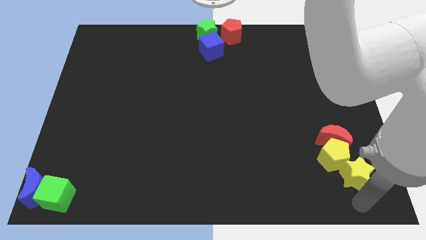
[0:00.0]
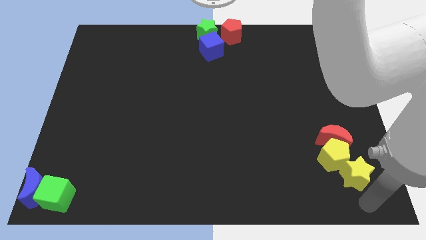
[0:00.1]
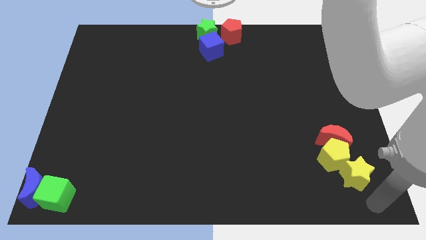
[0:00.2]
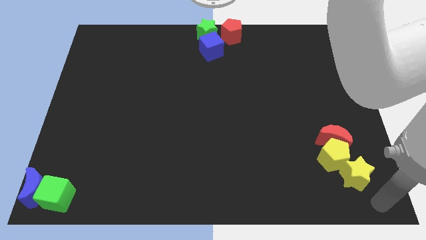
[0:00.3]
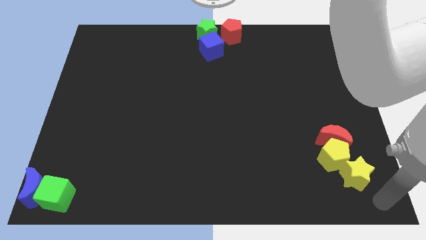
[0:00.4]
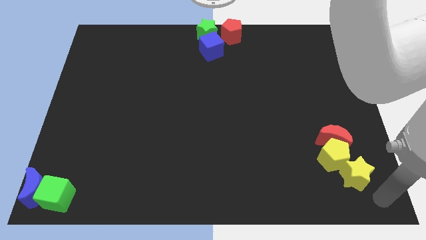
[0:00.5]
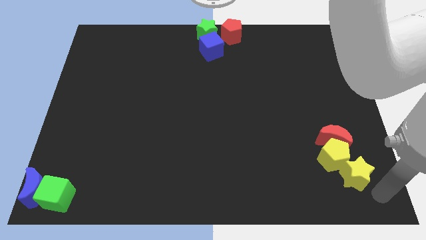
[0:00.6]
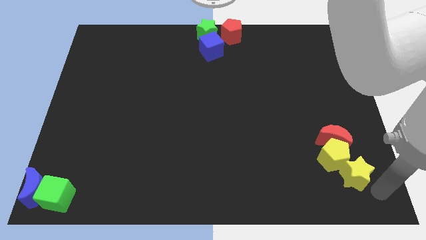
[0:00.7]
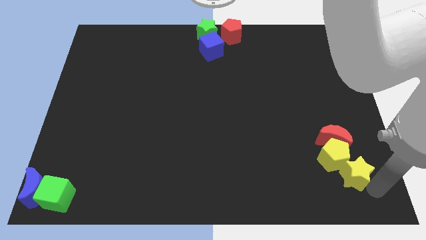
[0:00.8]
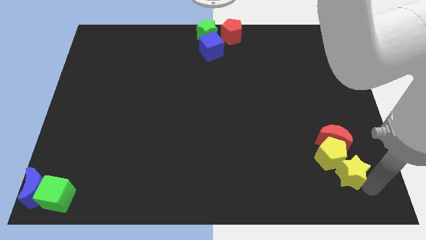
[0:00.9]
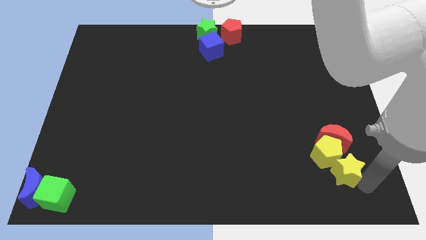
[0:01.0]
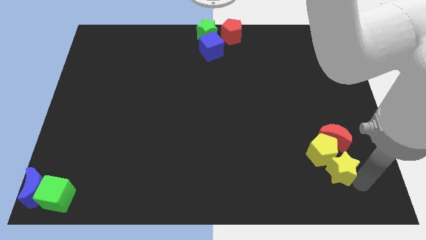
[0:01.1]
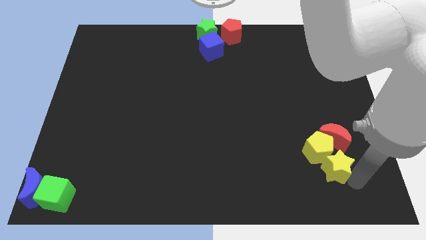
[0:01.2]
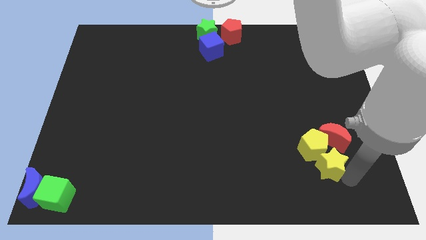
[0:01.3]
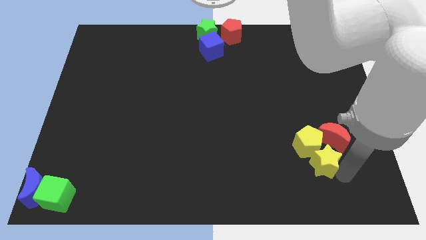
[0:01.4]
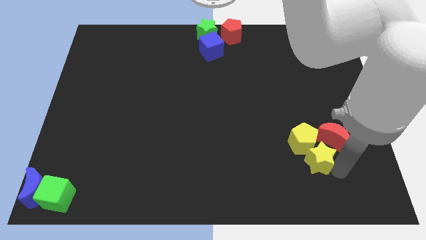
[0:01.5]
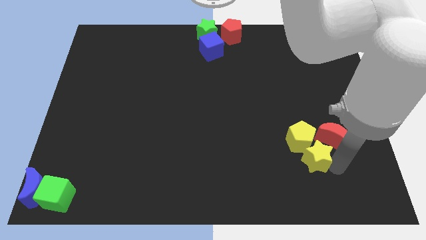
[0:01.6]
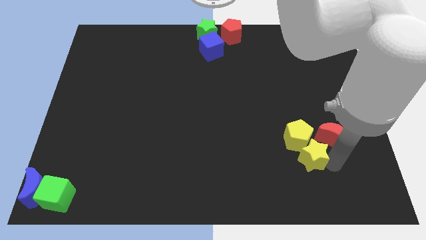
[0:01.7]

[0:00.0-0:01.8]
push the yellow pentagon slightly with the yellow star towards the center of the board

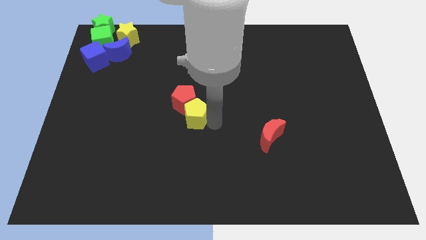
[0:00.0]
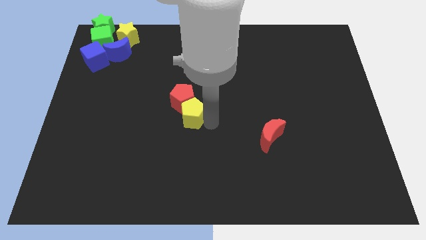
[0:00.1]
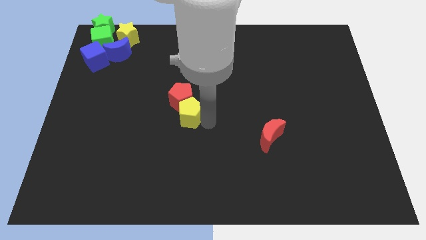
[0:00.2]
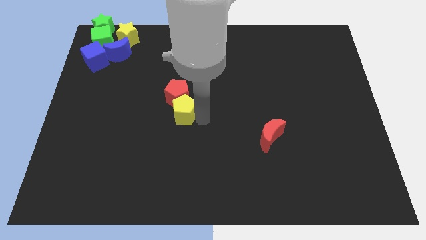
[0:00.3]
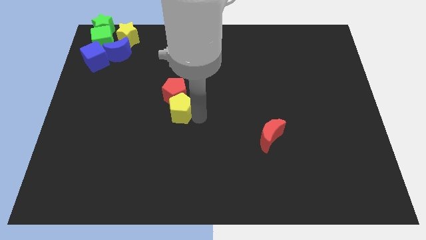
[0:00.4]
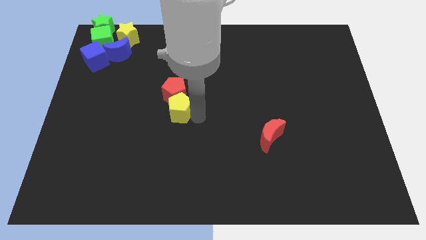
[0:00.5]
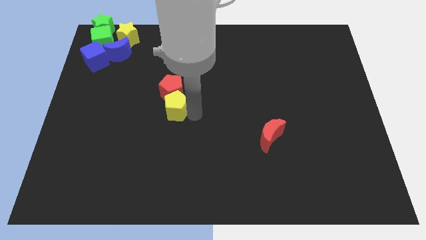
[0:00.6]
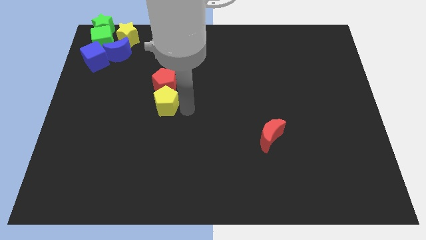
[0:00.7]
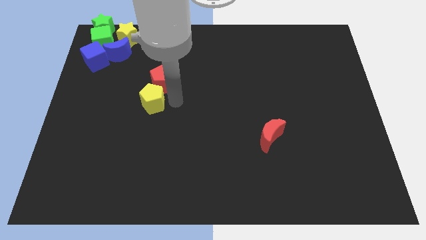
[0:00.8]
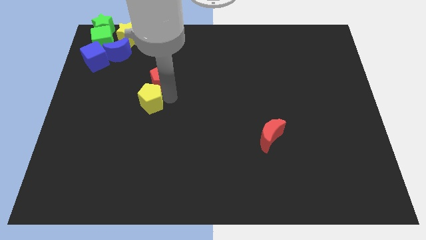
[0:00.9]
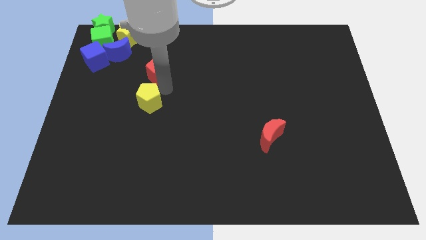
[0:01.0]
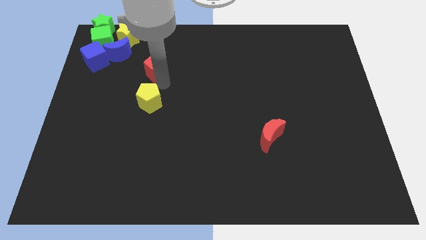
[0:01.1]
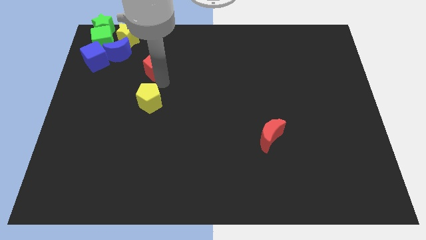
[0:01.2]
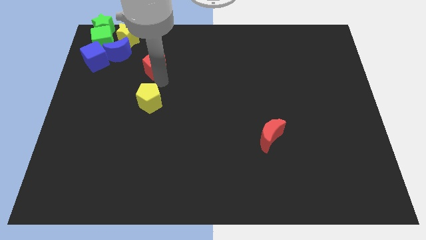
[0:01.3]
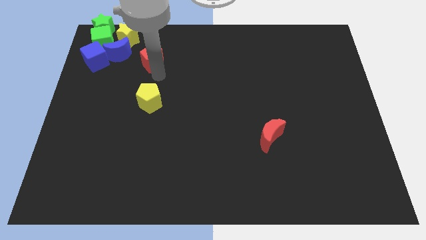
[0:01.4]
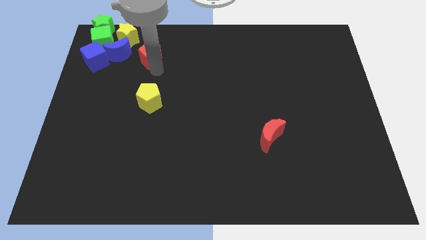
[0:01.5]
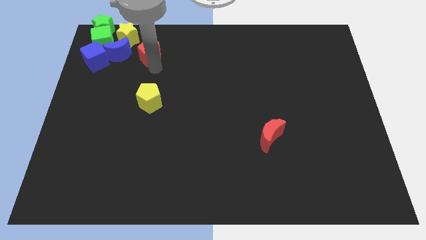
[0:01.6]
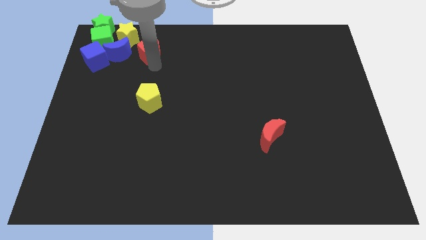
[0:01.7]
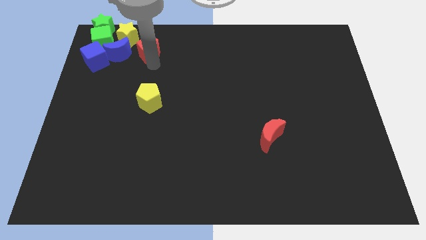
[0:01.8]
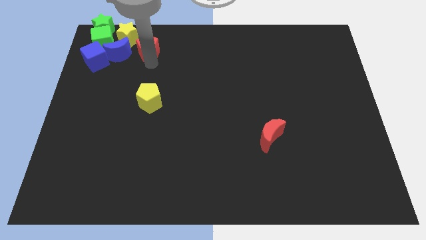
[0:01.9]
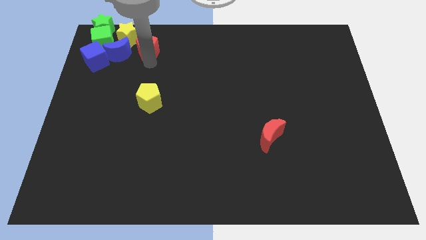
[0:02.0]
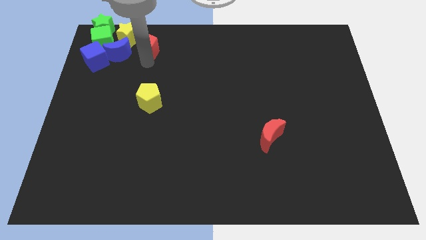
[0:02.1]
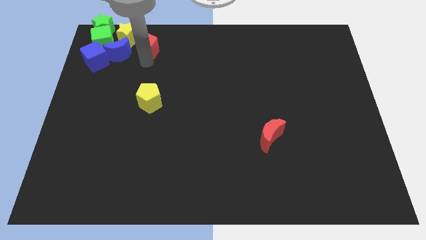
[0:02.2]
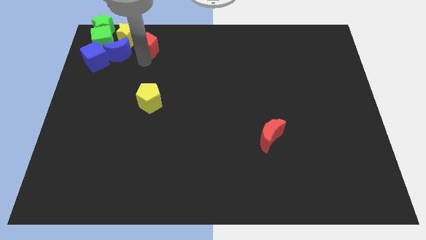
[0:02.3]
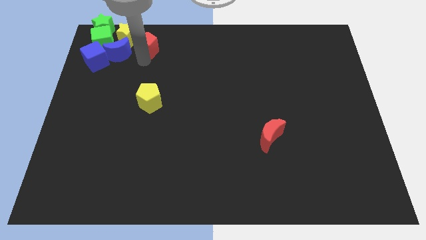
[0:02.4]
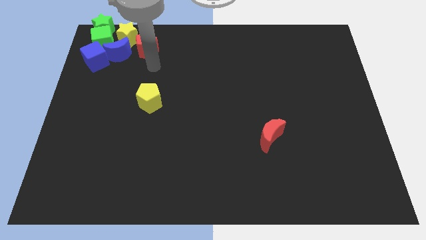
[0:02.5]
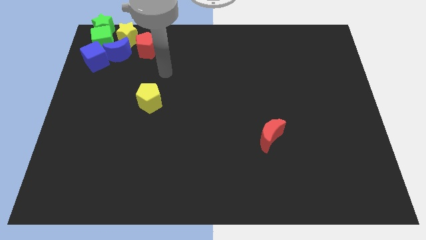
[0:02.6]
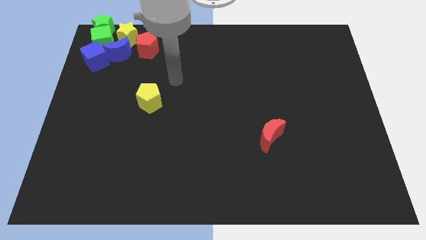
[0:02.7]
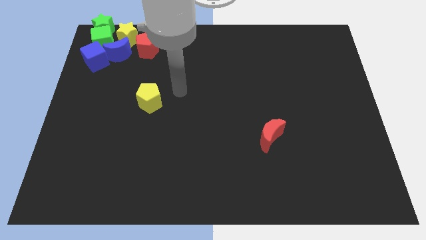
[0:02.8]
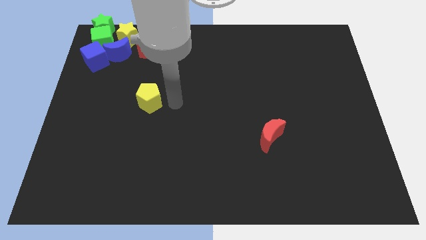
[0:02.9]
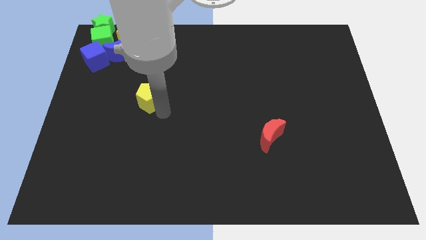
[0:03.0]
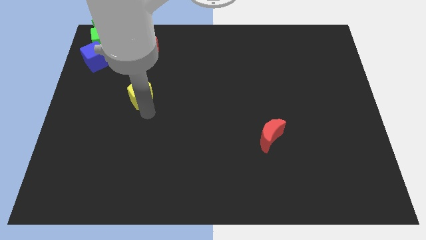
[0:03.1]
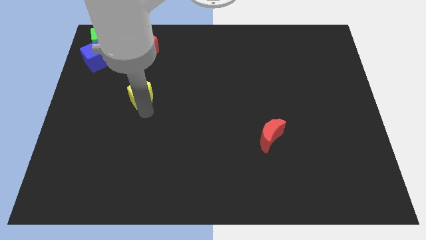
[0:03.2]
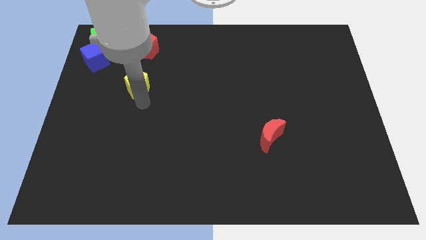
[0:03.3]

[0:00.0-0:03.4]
separate the red pentagon and yellow pentagon

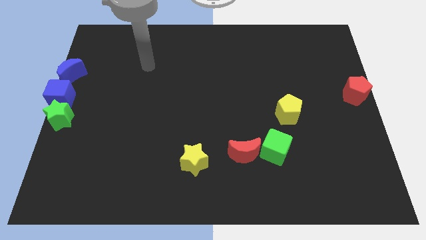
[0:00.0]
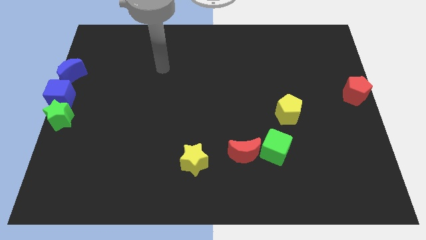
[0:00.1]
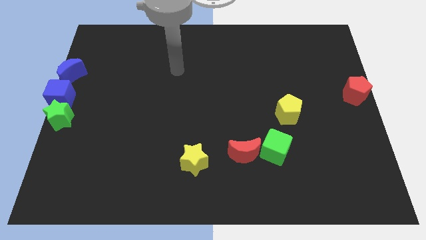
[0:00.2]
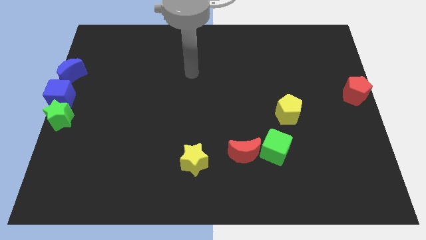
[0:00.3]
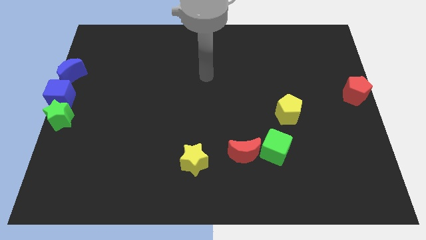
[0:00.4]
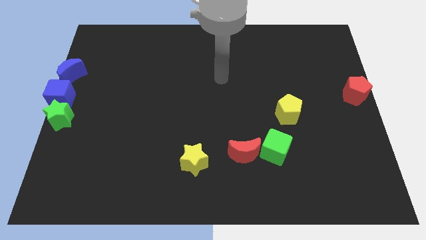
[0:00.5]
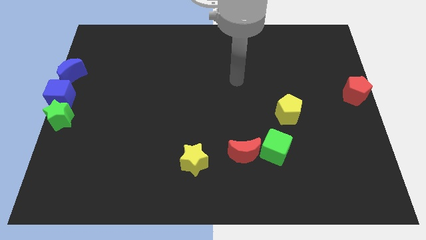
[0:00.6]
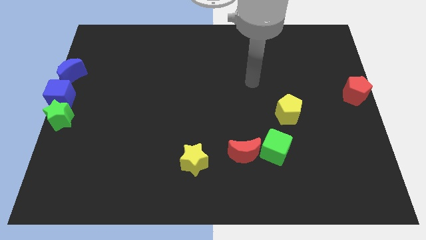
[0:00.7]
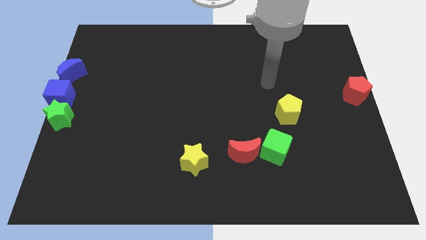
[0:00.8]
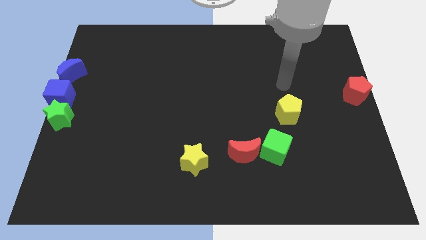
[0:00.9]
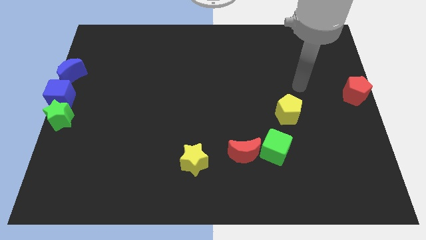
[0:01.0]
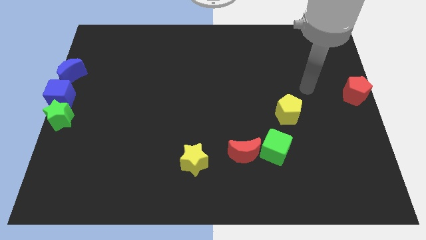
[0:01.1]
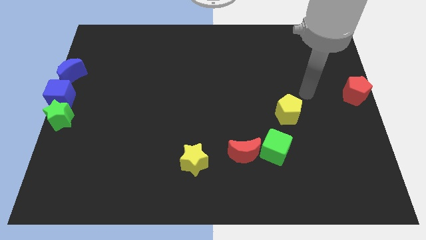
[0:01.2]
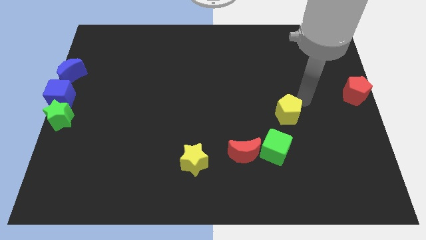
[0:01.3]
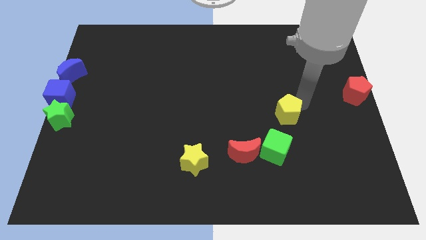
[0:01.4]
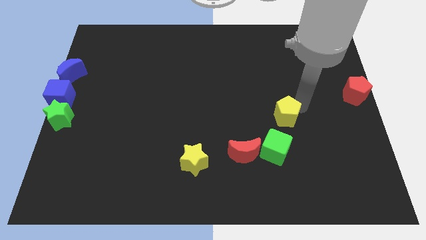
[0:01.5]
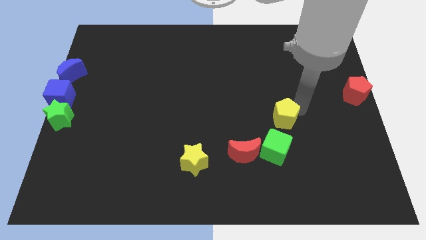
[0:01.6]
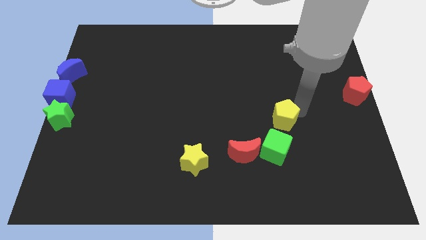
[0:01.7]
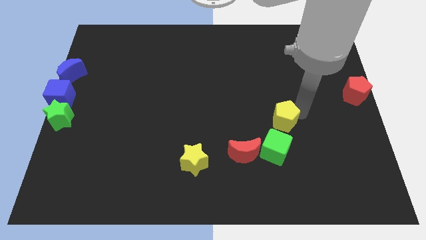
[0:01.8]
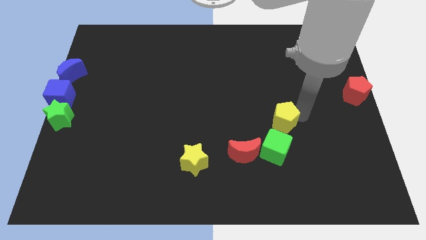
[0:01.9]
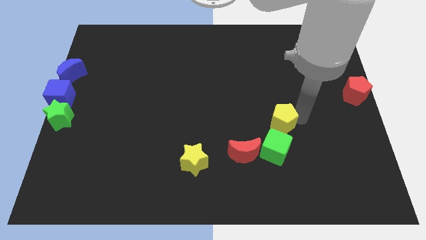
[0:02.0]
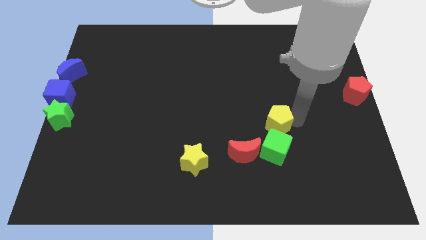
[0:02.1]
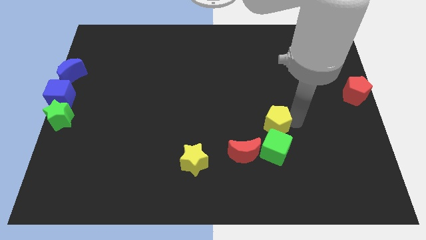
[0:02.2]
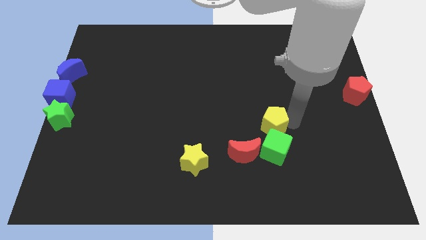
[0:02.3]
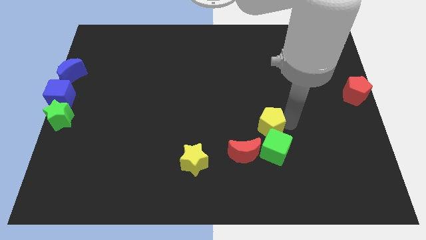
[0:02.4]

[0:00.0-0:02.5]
place the yellow pentagon above the green cube

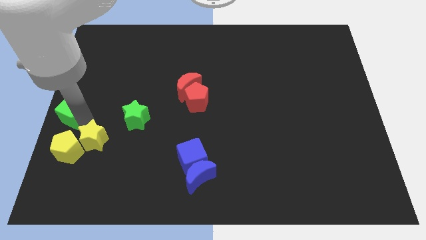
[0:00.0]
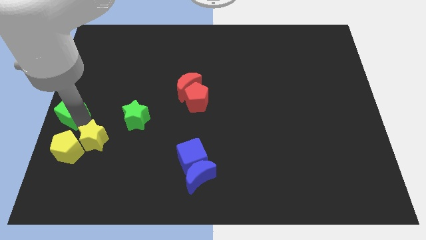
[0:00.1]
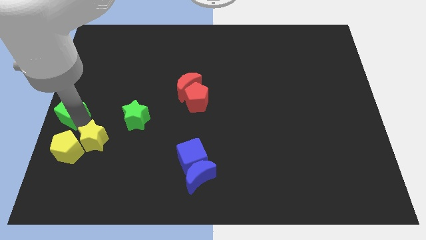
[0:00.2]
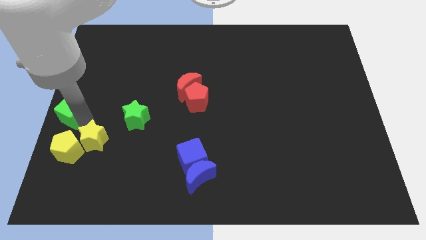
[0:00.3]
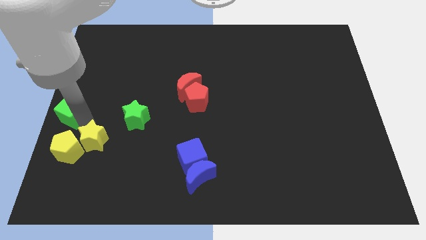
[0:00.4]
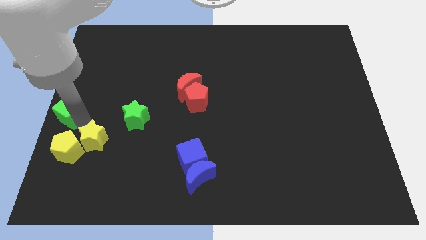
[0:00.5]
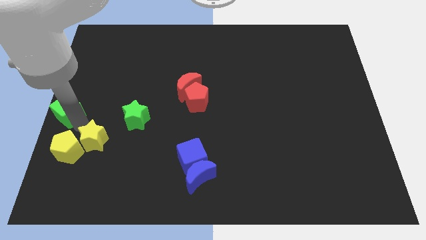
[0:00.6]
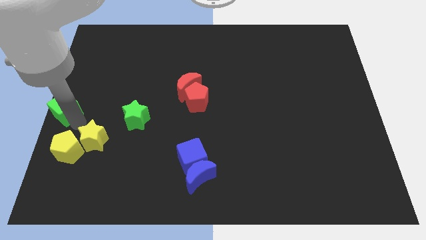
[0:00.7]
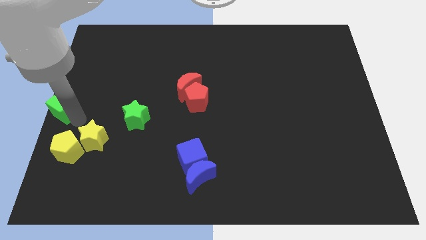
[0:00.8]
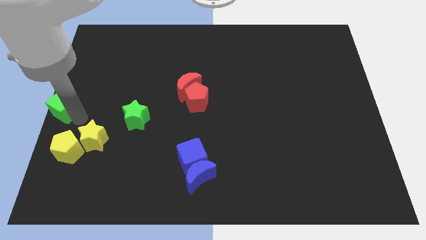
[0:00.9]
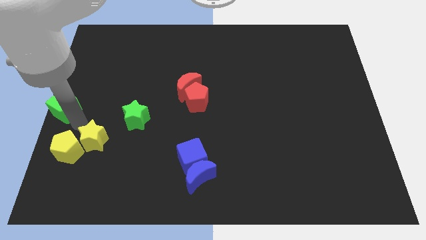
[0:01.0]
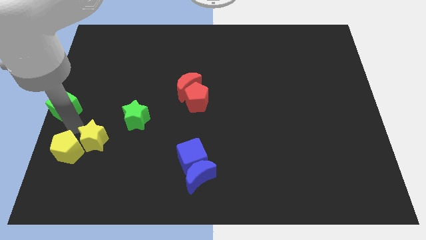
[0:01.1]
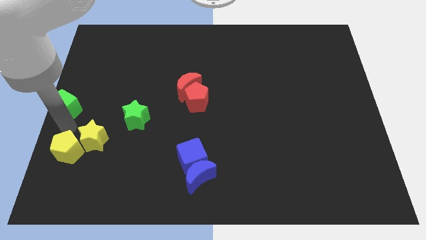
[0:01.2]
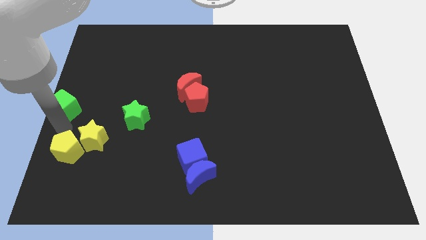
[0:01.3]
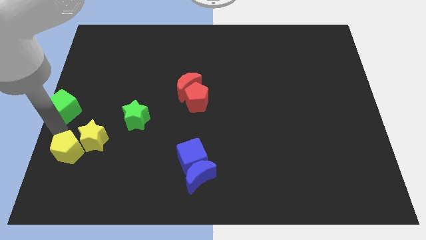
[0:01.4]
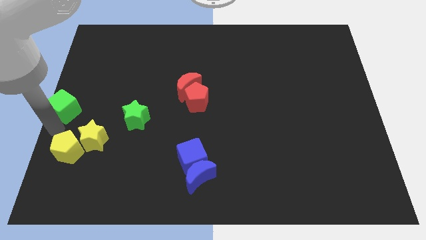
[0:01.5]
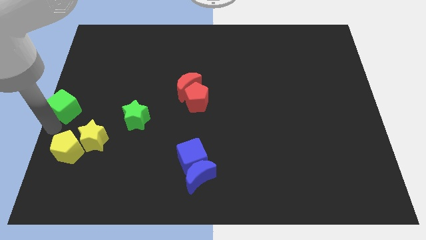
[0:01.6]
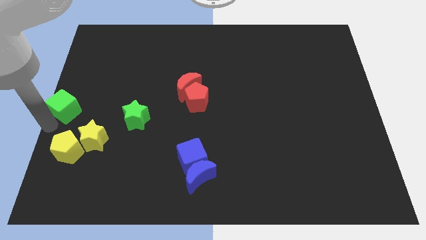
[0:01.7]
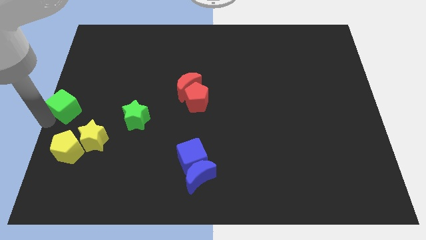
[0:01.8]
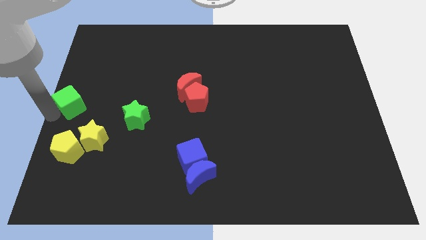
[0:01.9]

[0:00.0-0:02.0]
move the green cube parallel to the top left of the yellow star
